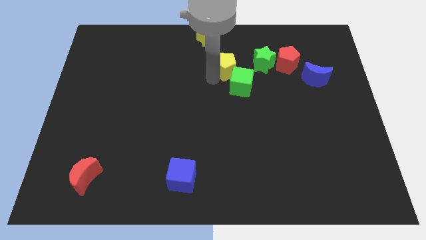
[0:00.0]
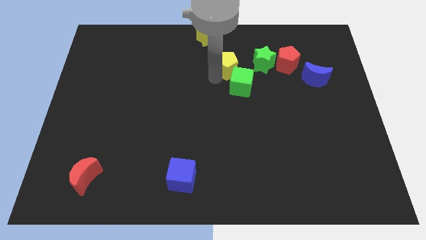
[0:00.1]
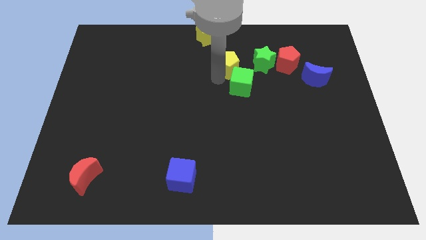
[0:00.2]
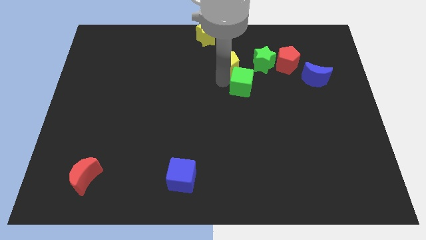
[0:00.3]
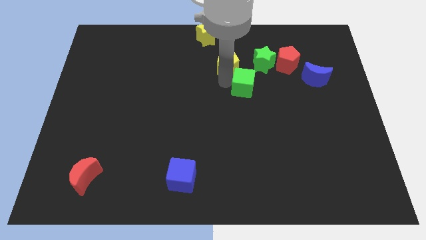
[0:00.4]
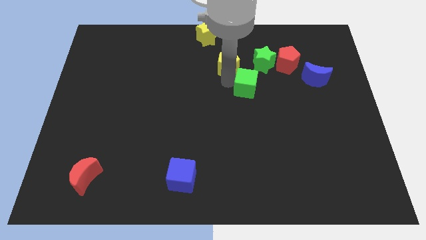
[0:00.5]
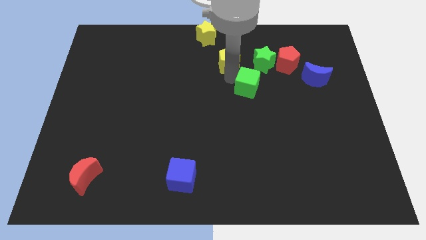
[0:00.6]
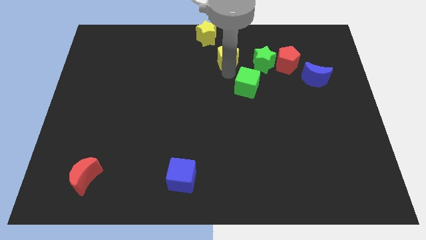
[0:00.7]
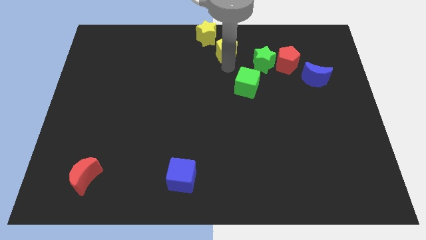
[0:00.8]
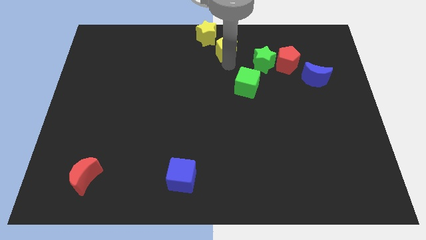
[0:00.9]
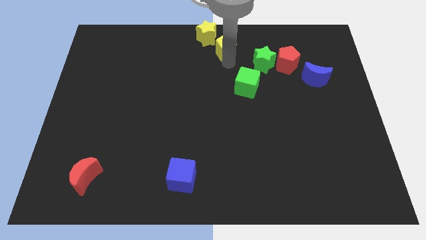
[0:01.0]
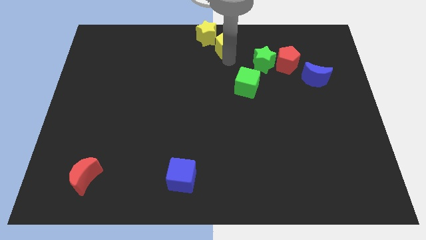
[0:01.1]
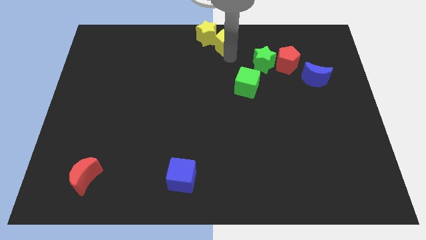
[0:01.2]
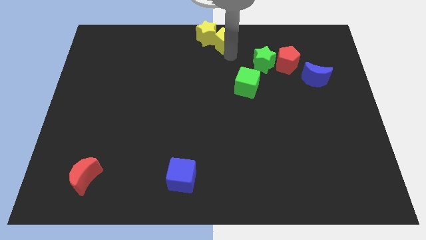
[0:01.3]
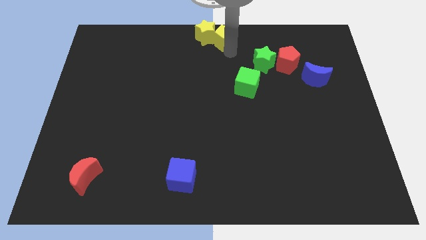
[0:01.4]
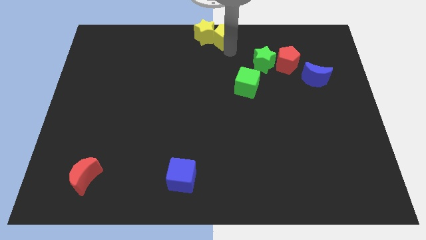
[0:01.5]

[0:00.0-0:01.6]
move the yellow pentagon to the right of the yellow star

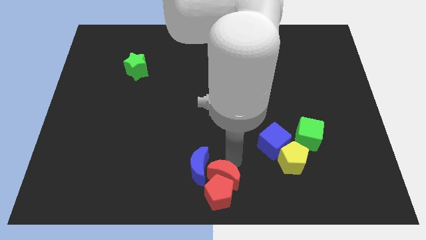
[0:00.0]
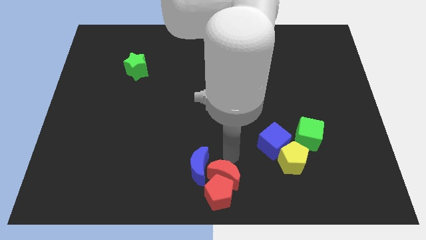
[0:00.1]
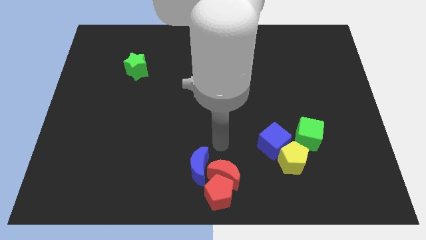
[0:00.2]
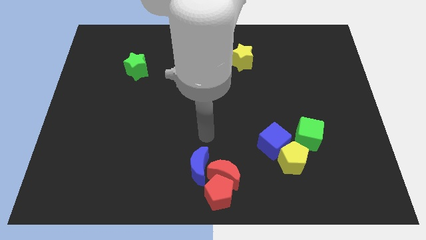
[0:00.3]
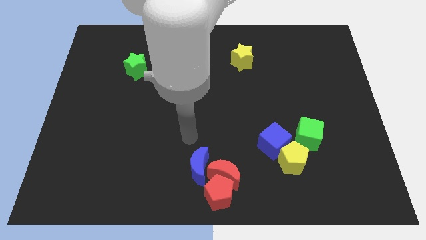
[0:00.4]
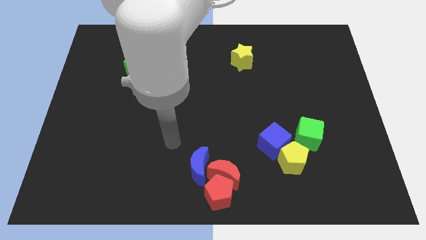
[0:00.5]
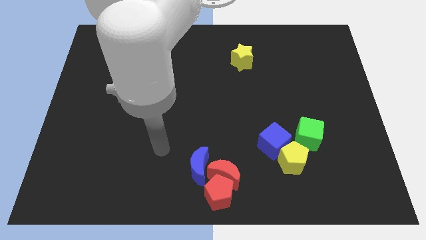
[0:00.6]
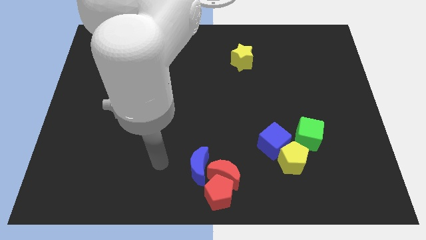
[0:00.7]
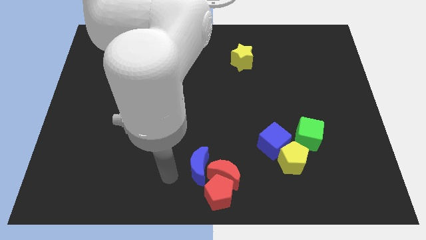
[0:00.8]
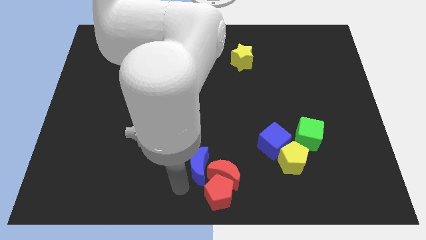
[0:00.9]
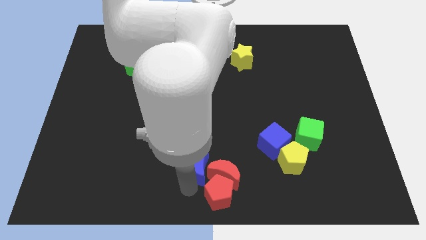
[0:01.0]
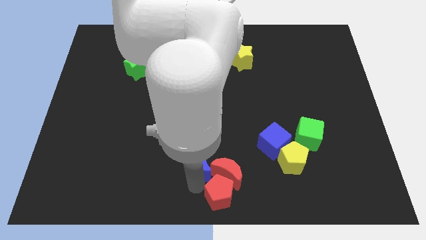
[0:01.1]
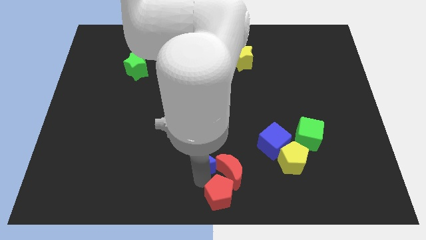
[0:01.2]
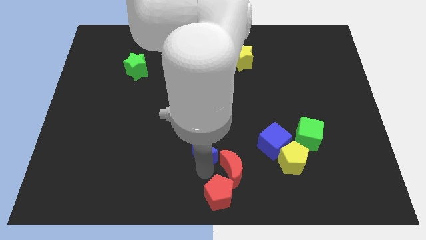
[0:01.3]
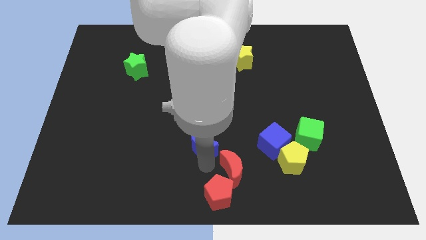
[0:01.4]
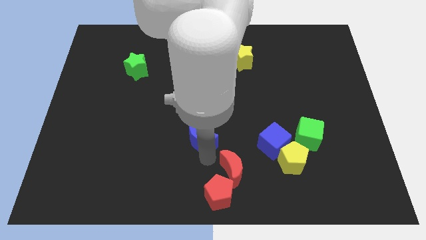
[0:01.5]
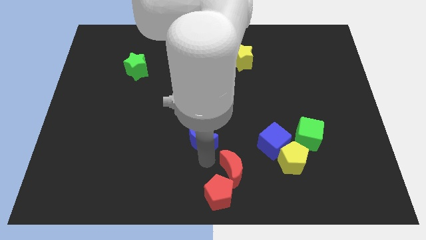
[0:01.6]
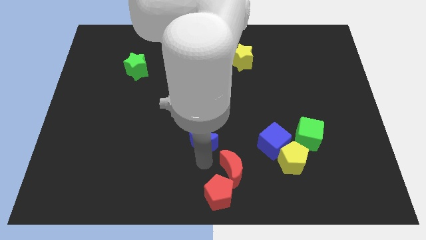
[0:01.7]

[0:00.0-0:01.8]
separate the red crescent and blue crescent

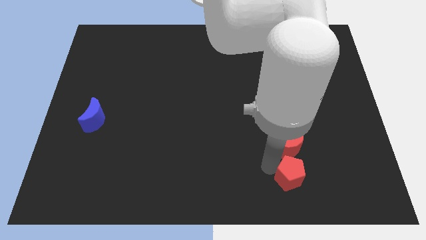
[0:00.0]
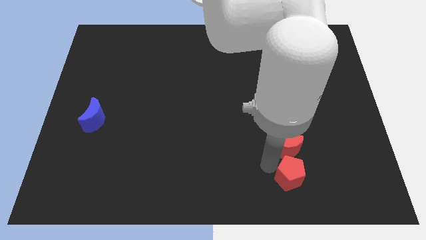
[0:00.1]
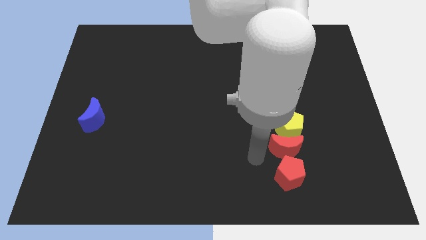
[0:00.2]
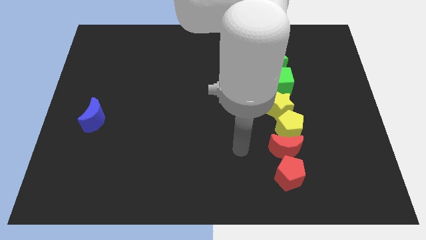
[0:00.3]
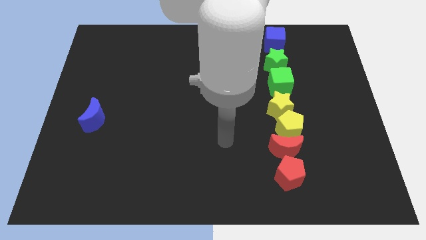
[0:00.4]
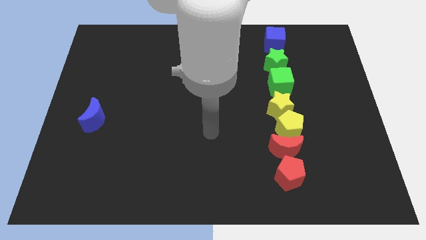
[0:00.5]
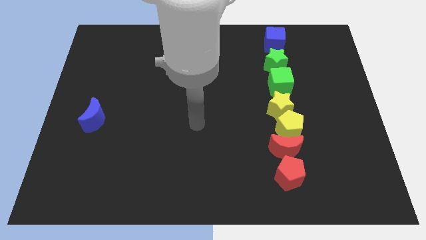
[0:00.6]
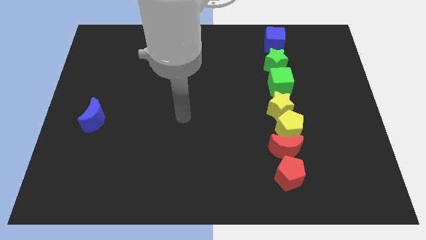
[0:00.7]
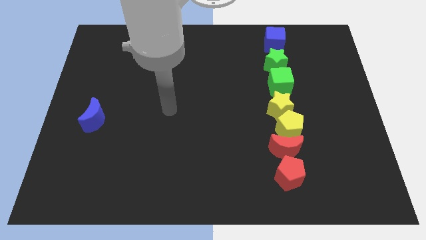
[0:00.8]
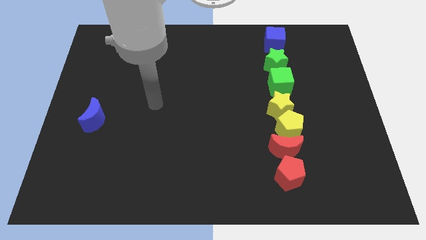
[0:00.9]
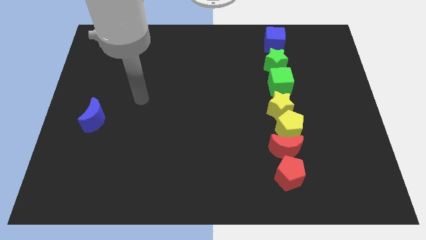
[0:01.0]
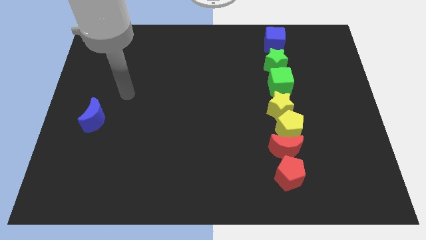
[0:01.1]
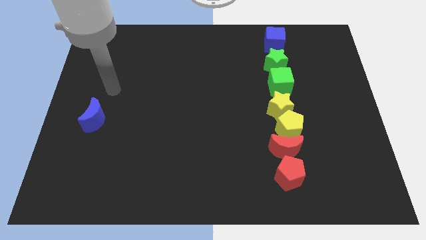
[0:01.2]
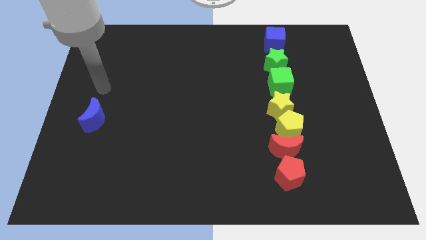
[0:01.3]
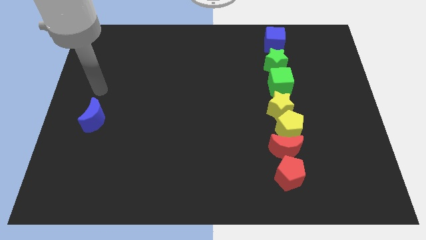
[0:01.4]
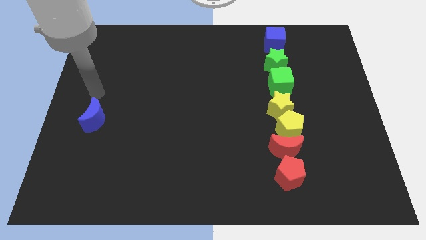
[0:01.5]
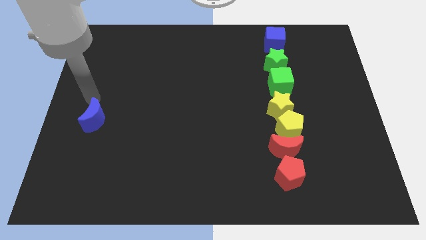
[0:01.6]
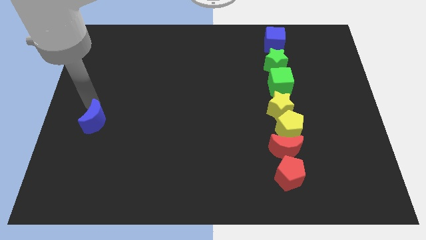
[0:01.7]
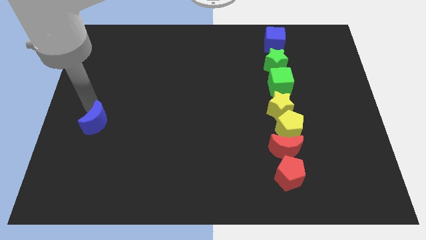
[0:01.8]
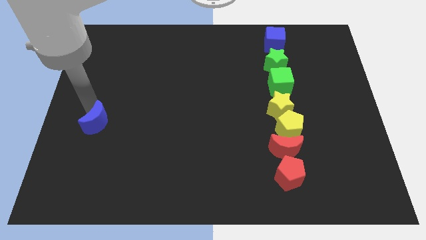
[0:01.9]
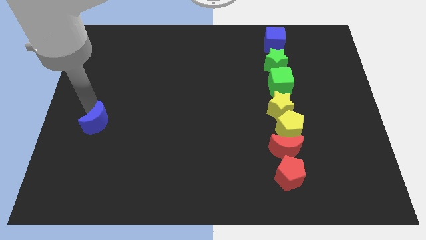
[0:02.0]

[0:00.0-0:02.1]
move your arm towards blue moon

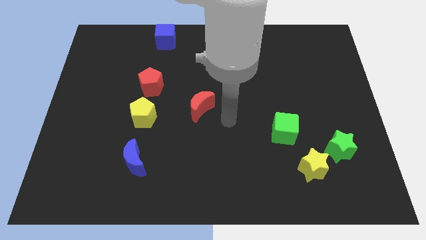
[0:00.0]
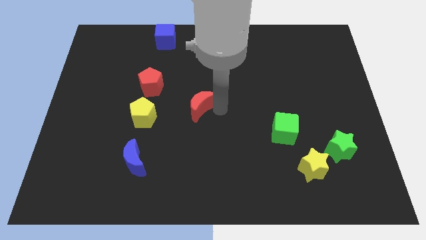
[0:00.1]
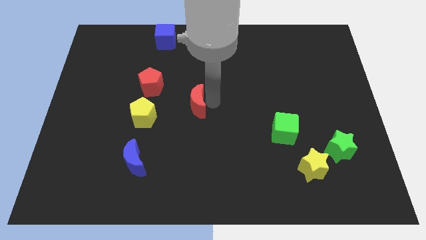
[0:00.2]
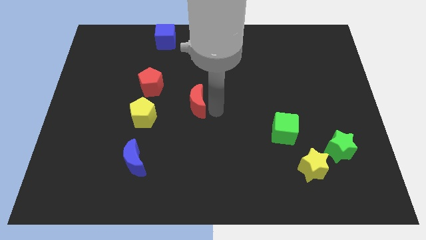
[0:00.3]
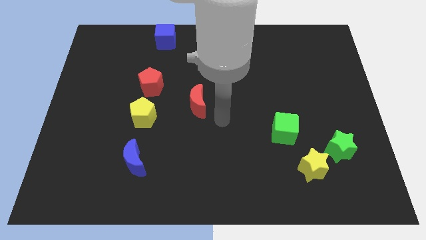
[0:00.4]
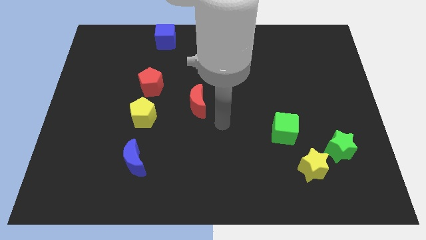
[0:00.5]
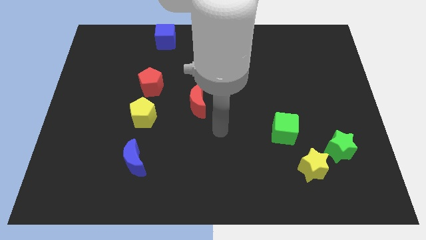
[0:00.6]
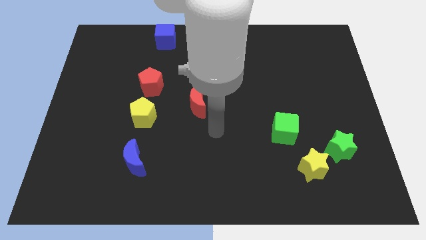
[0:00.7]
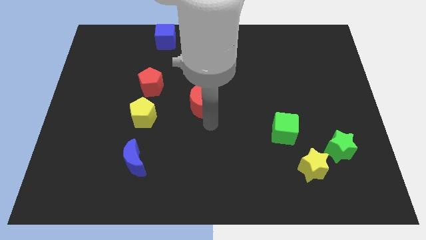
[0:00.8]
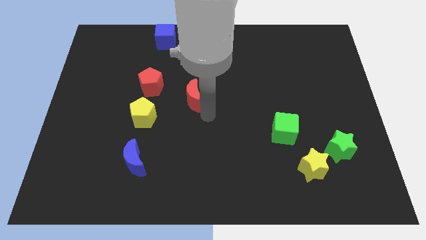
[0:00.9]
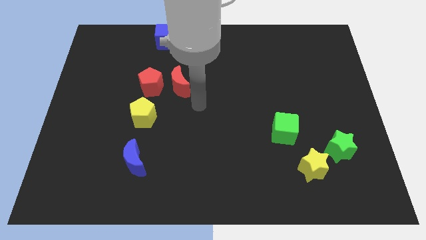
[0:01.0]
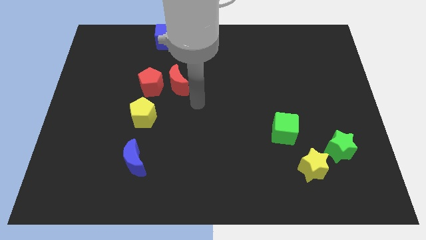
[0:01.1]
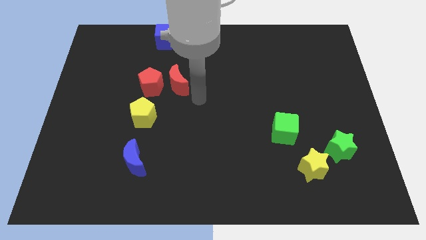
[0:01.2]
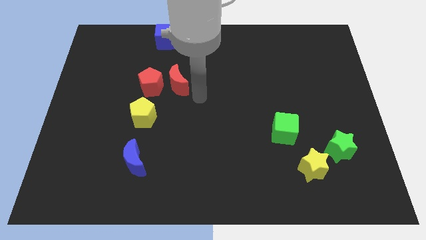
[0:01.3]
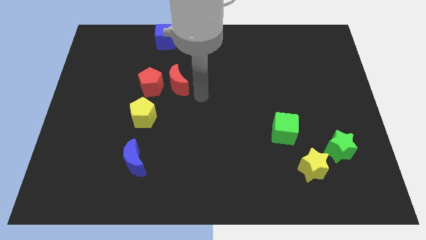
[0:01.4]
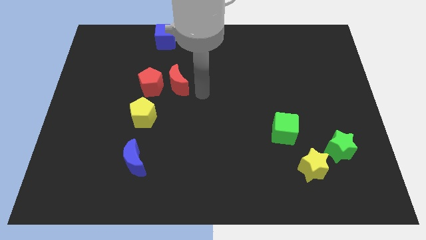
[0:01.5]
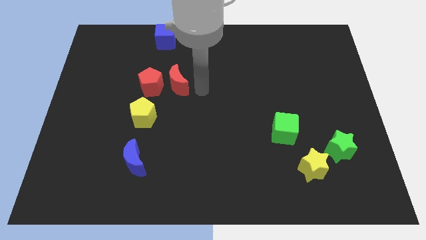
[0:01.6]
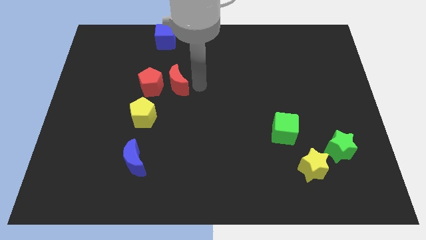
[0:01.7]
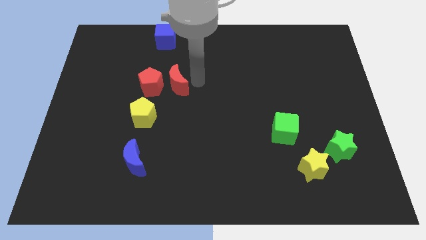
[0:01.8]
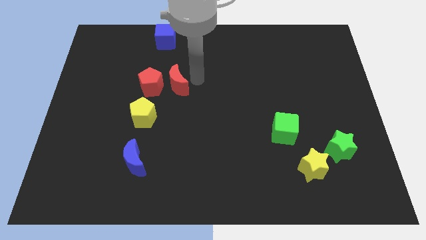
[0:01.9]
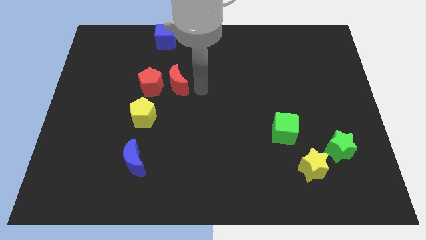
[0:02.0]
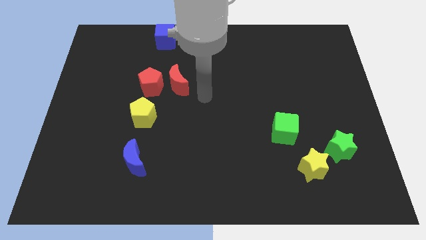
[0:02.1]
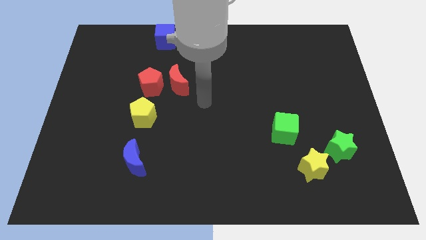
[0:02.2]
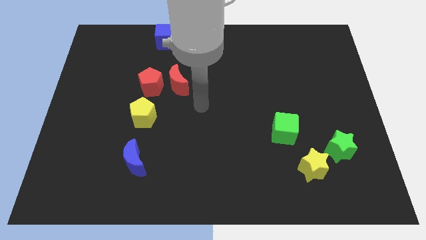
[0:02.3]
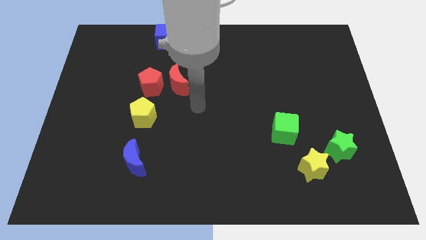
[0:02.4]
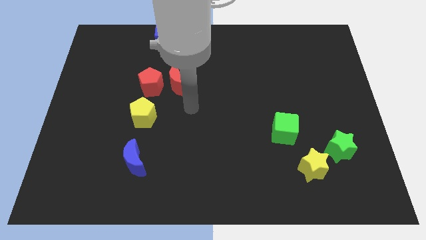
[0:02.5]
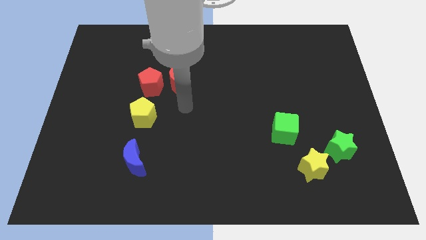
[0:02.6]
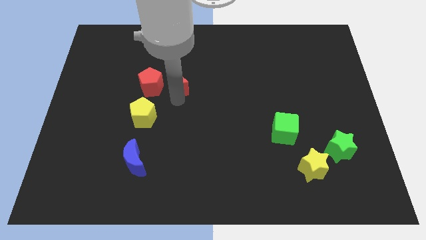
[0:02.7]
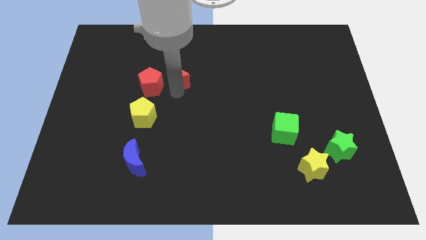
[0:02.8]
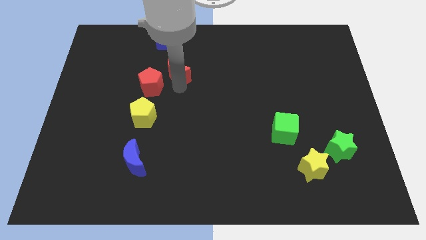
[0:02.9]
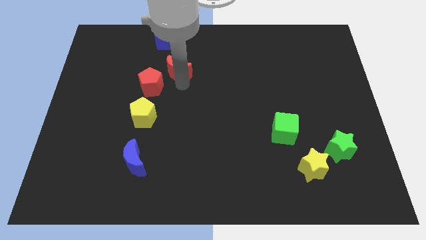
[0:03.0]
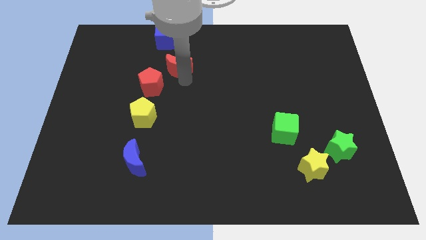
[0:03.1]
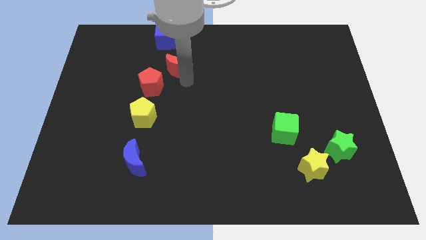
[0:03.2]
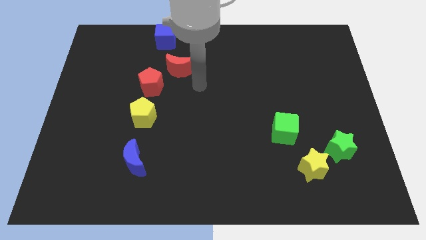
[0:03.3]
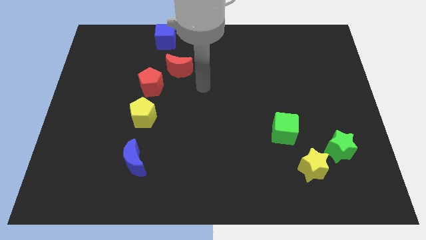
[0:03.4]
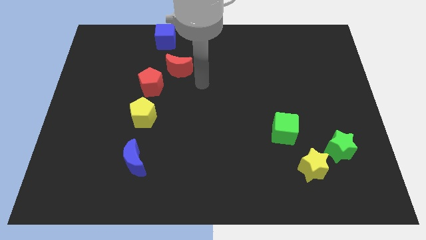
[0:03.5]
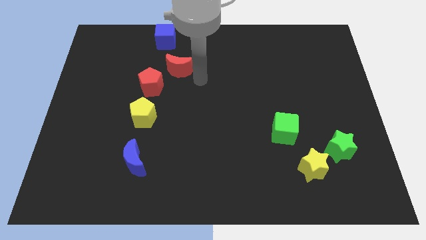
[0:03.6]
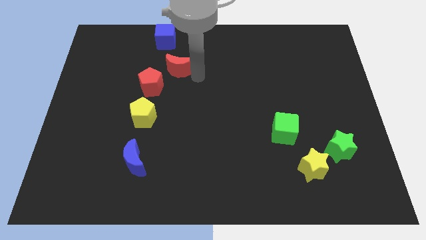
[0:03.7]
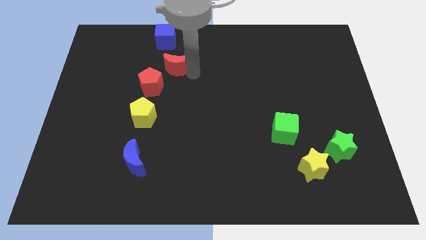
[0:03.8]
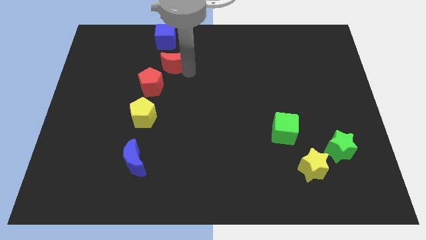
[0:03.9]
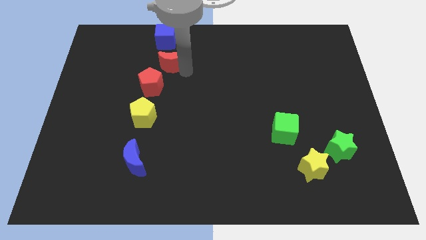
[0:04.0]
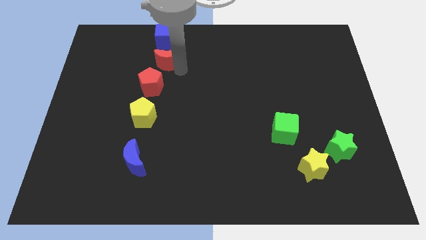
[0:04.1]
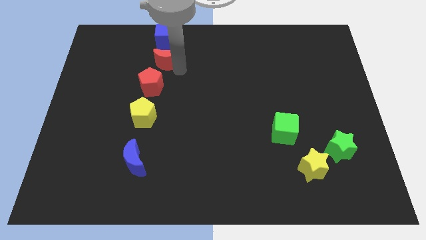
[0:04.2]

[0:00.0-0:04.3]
push the red moon below the blue moon
